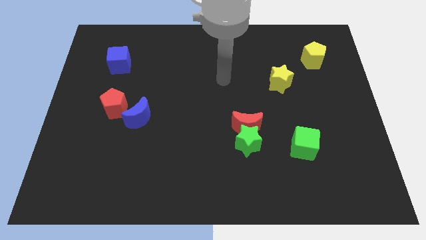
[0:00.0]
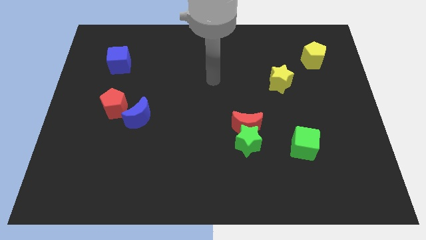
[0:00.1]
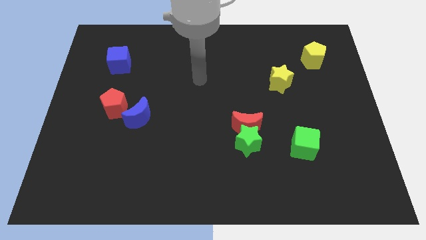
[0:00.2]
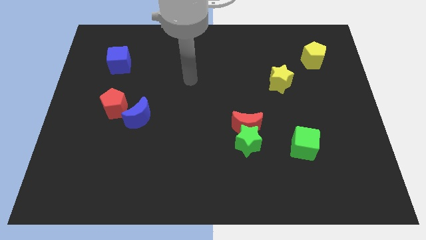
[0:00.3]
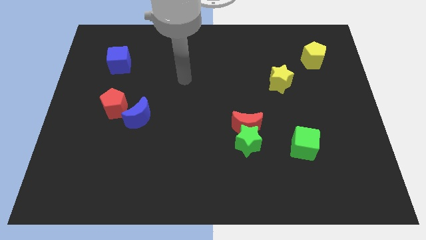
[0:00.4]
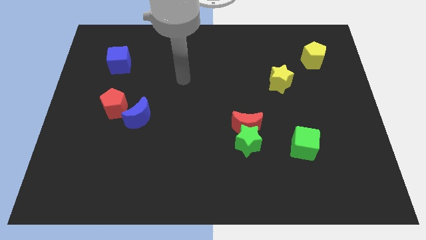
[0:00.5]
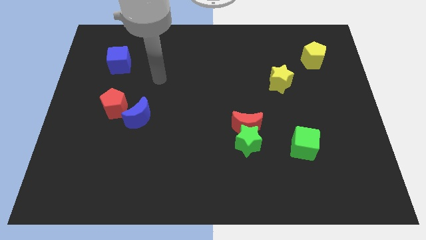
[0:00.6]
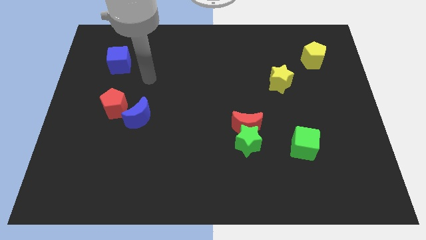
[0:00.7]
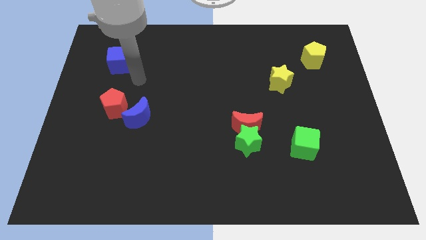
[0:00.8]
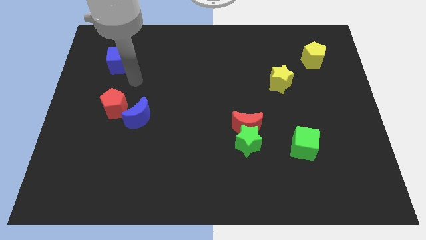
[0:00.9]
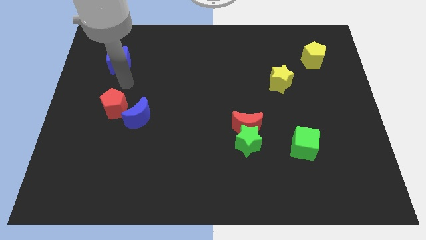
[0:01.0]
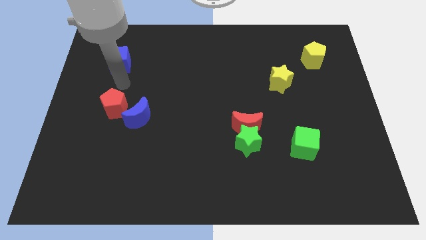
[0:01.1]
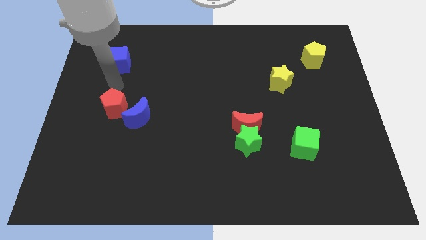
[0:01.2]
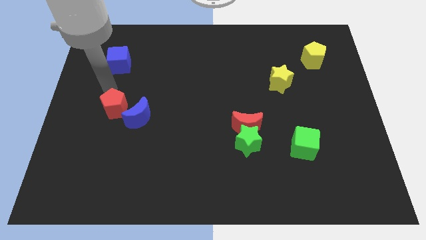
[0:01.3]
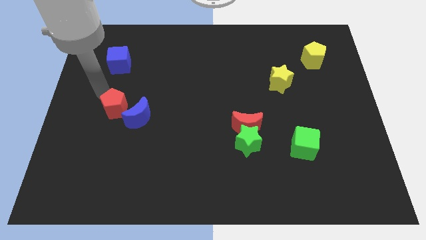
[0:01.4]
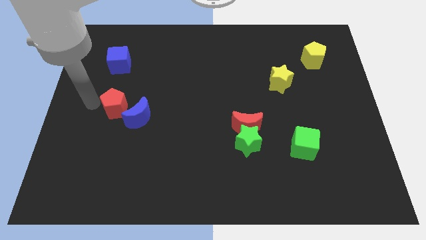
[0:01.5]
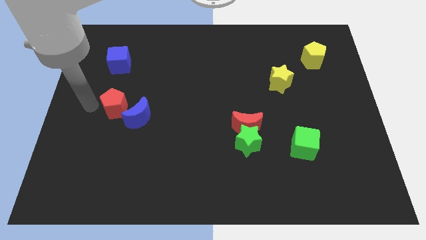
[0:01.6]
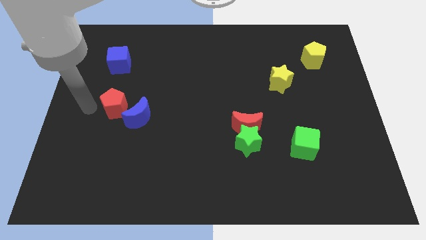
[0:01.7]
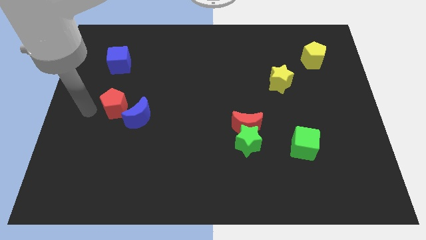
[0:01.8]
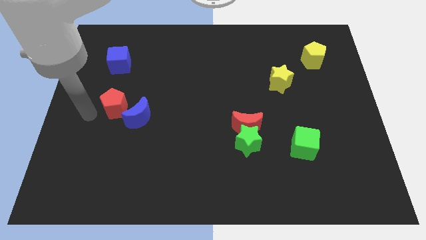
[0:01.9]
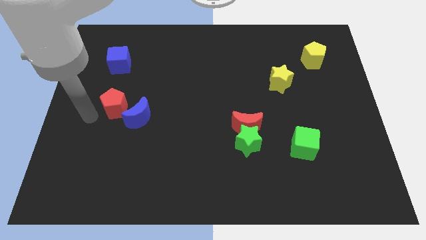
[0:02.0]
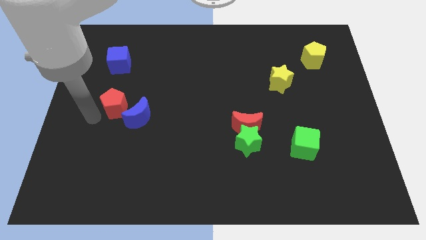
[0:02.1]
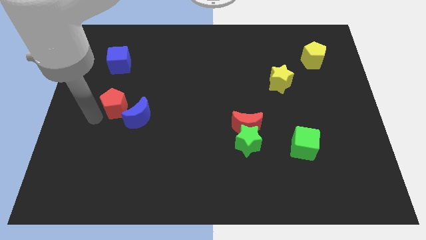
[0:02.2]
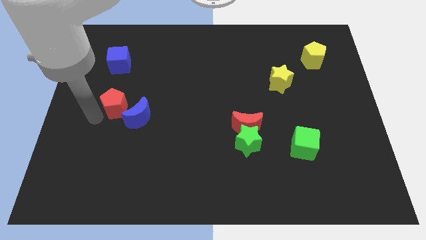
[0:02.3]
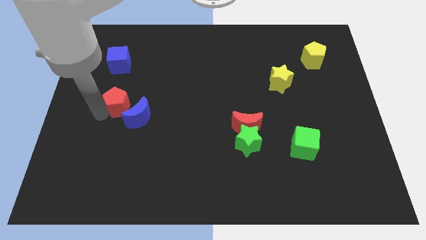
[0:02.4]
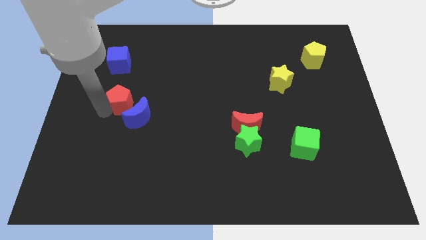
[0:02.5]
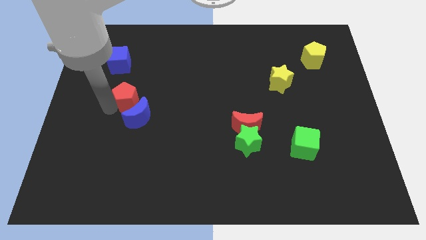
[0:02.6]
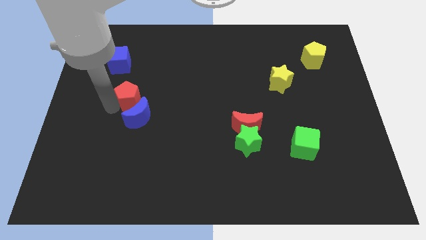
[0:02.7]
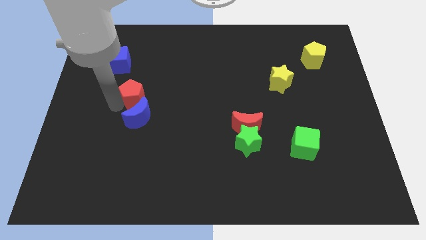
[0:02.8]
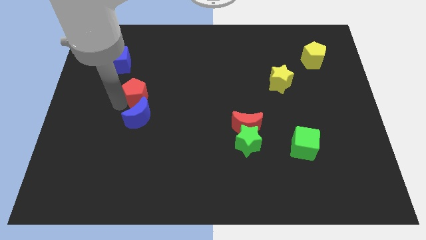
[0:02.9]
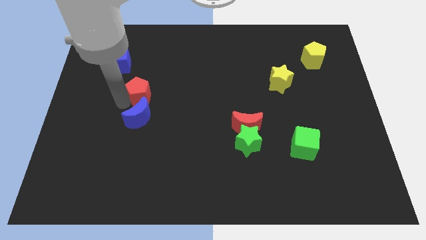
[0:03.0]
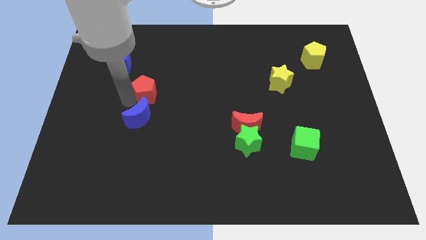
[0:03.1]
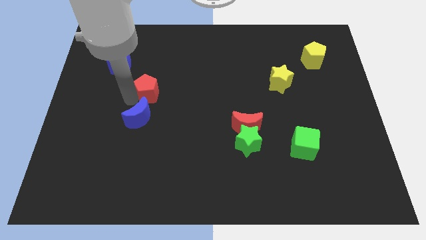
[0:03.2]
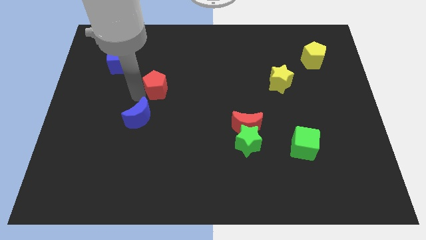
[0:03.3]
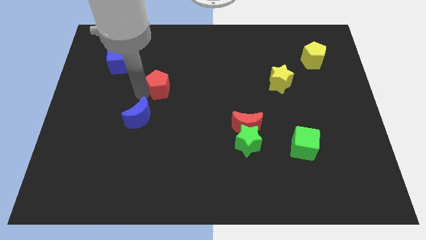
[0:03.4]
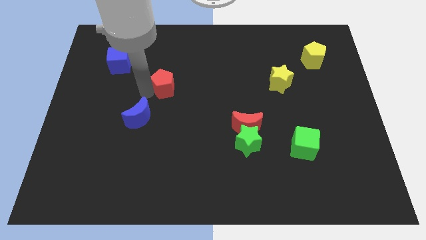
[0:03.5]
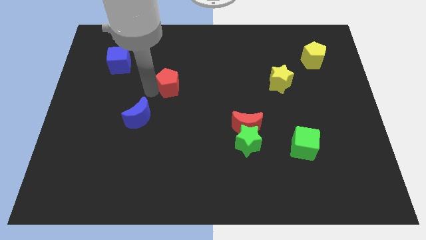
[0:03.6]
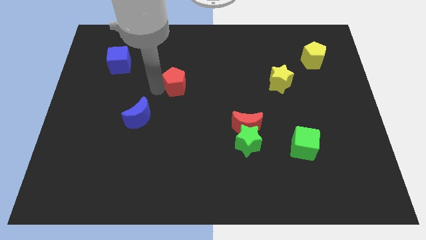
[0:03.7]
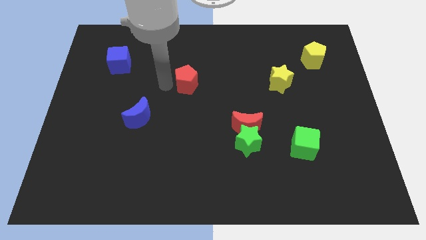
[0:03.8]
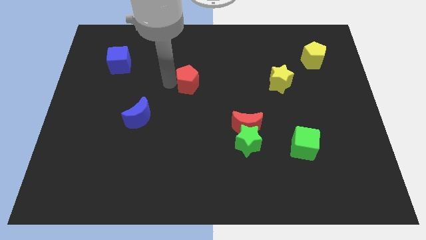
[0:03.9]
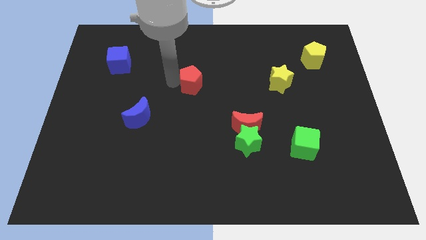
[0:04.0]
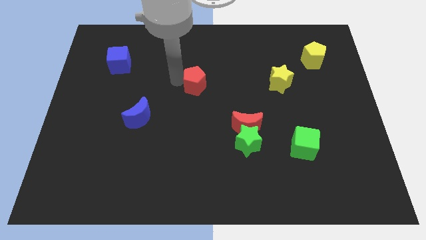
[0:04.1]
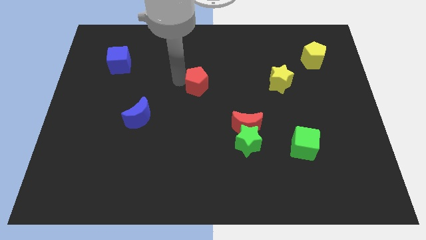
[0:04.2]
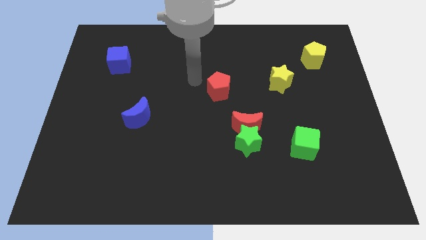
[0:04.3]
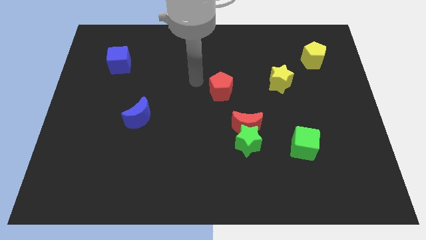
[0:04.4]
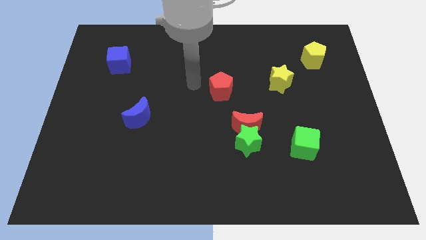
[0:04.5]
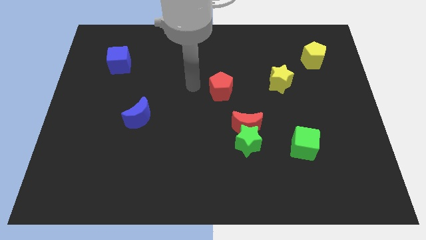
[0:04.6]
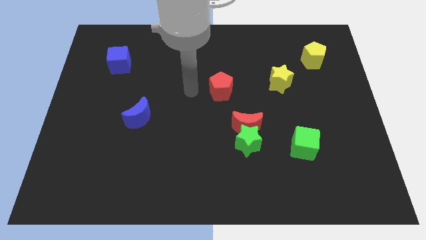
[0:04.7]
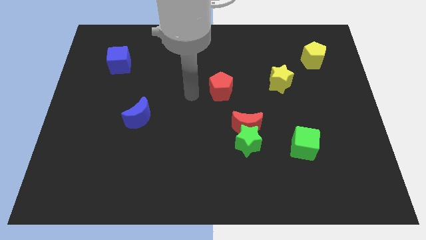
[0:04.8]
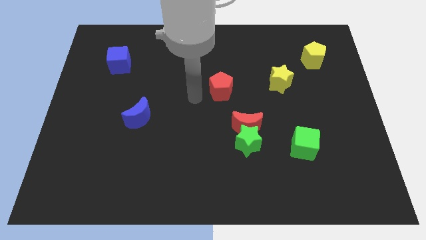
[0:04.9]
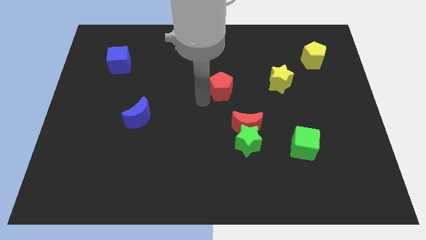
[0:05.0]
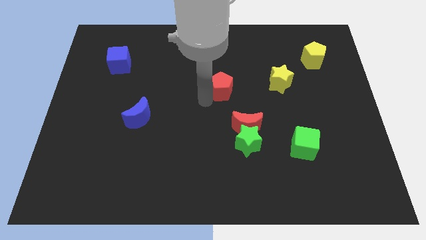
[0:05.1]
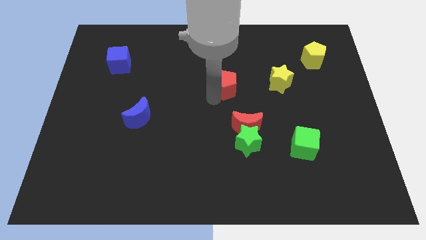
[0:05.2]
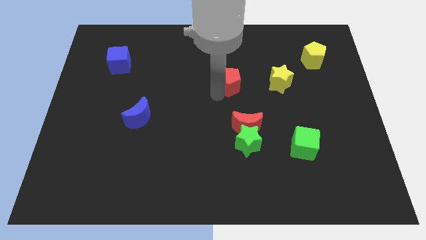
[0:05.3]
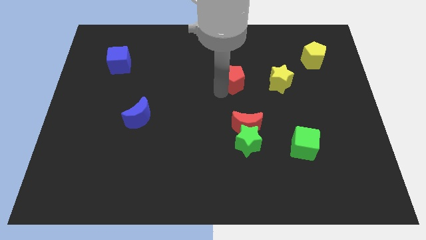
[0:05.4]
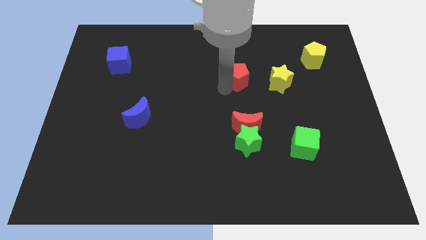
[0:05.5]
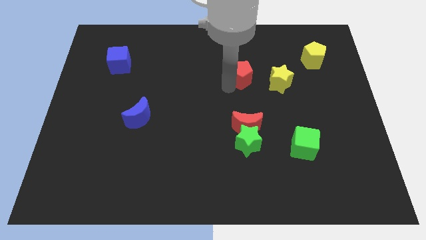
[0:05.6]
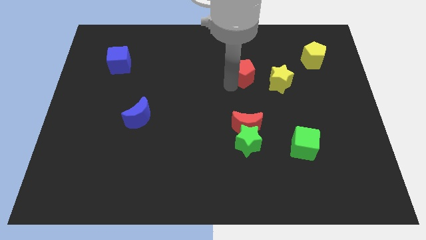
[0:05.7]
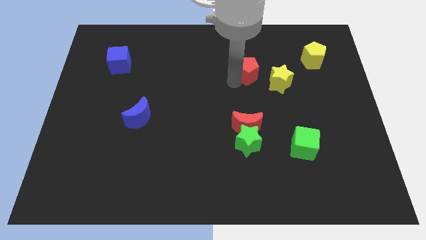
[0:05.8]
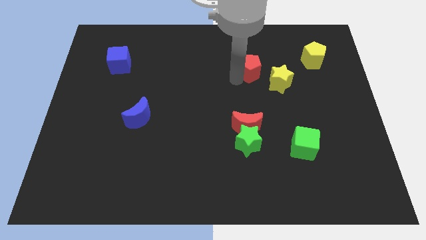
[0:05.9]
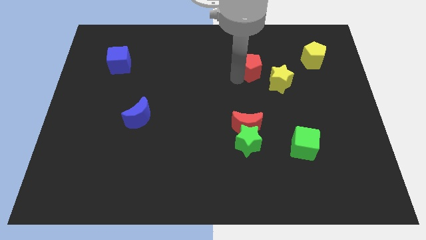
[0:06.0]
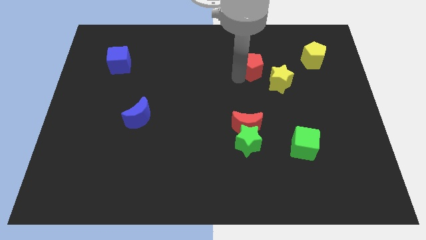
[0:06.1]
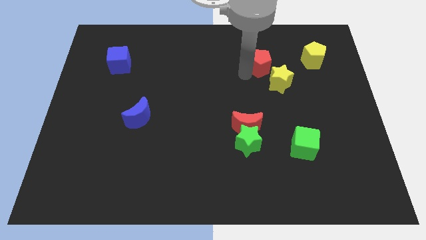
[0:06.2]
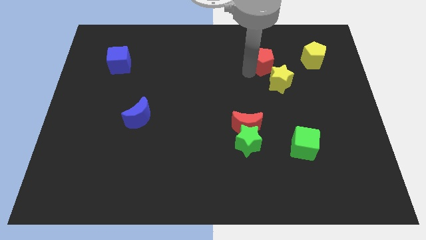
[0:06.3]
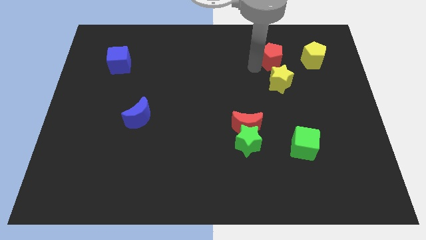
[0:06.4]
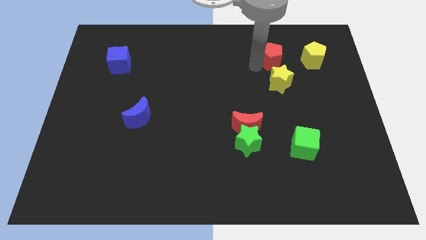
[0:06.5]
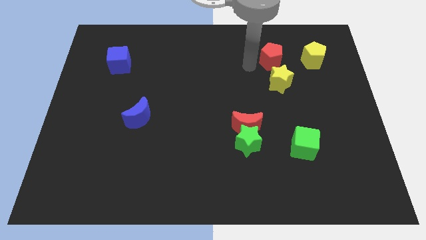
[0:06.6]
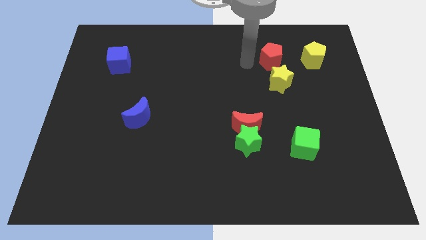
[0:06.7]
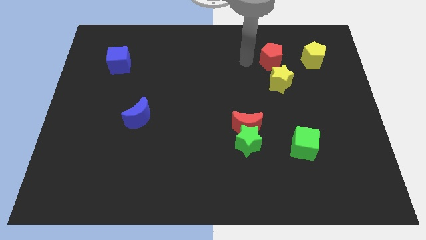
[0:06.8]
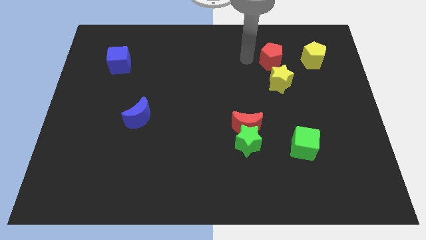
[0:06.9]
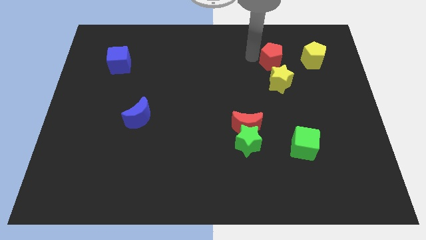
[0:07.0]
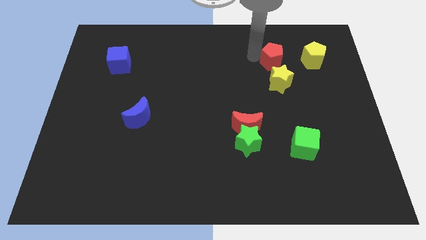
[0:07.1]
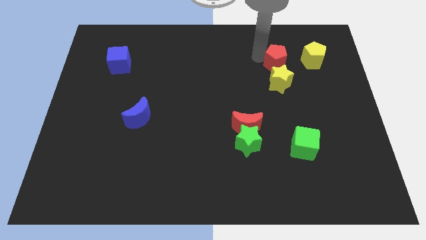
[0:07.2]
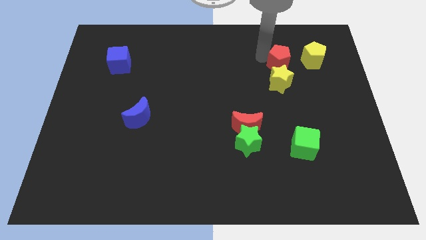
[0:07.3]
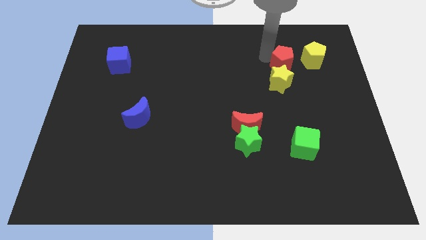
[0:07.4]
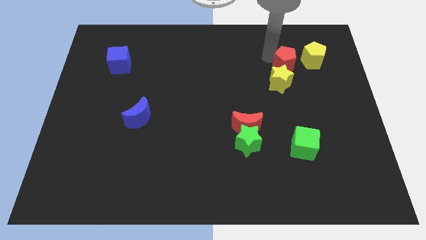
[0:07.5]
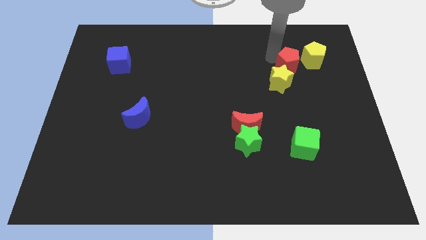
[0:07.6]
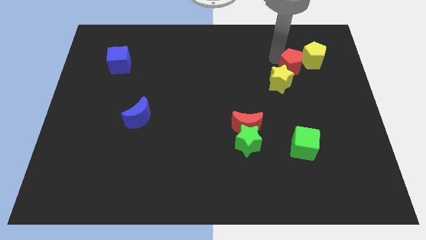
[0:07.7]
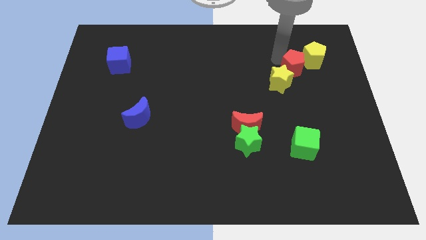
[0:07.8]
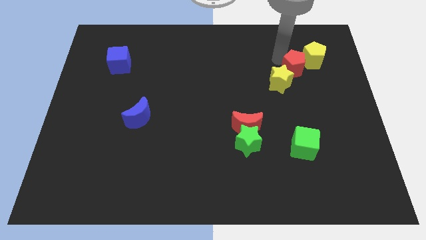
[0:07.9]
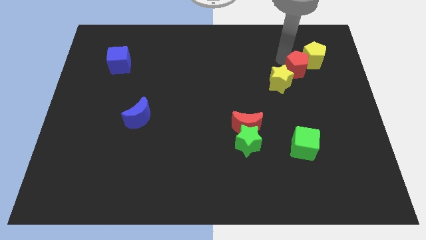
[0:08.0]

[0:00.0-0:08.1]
push the red pentagon next to the yellow pentagon

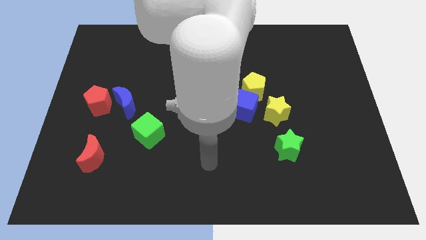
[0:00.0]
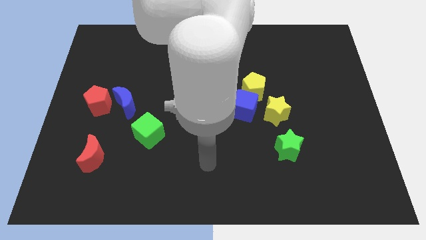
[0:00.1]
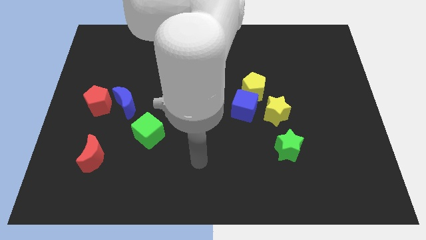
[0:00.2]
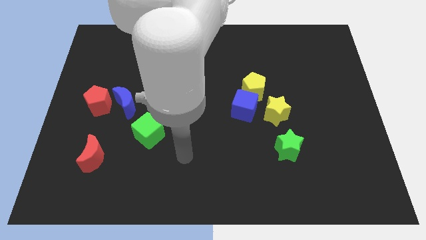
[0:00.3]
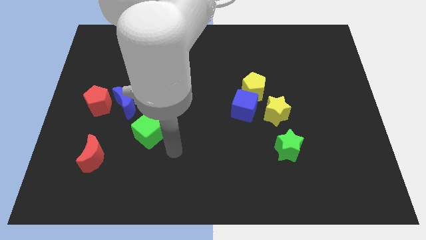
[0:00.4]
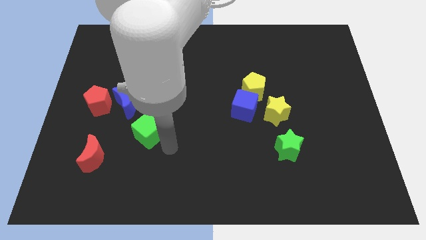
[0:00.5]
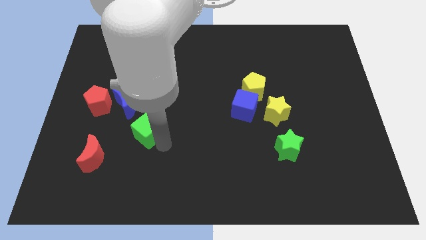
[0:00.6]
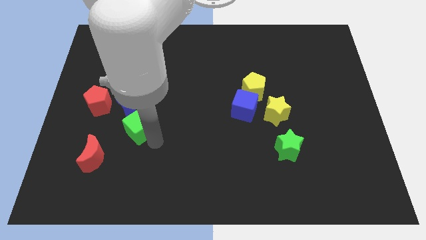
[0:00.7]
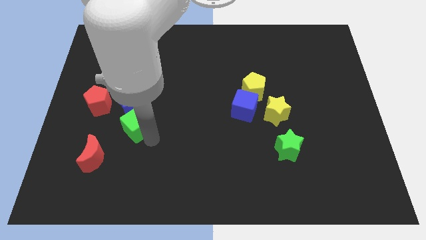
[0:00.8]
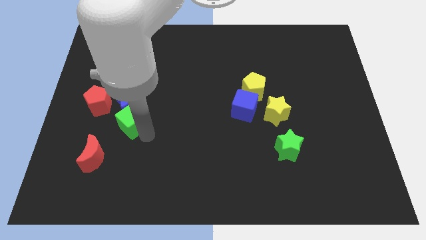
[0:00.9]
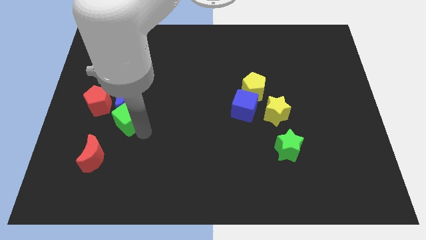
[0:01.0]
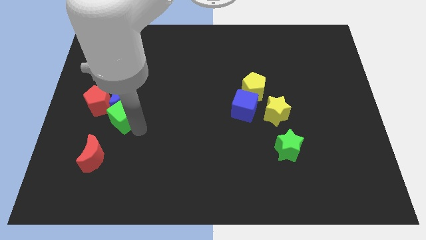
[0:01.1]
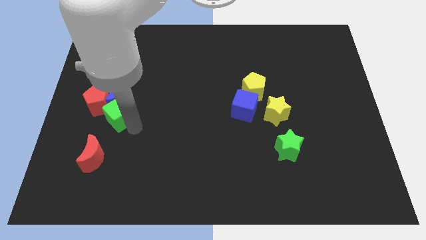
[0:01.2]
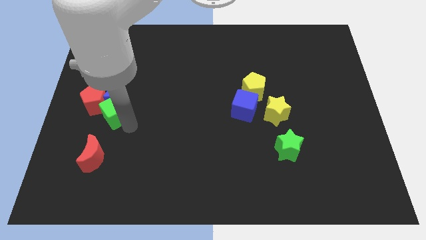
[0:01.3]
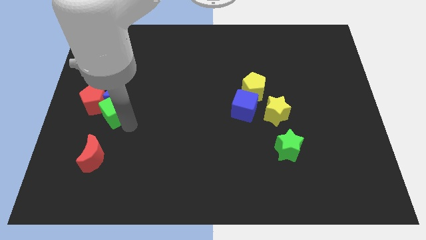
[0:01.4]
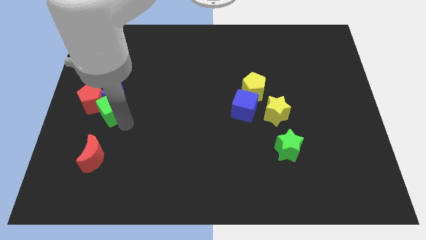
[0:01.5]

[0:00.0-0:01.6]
push the green cube towards the red pentagon
